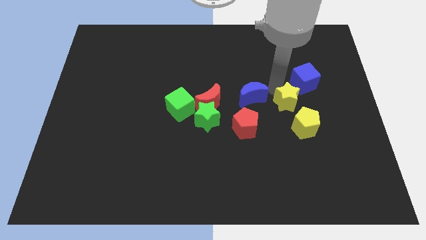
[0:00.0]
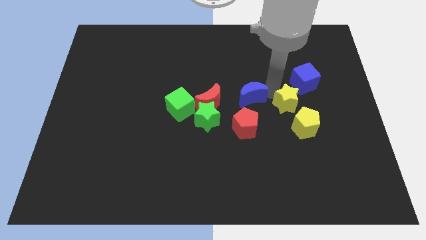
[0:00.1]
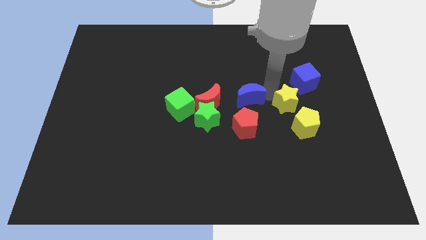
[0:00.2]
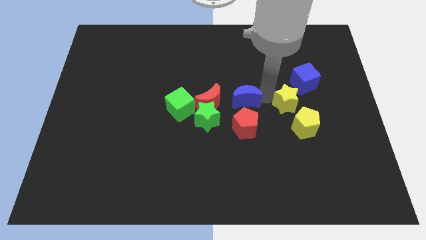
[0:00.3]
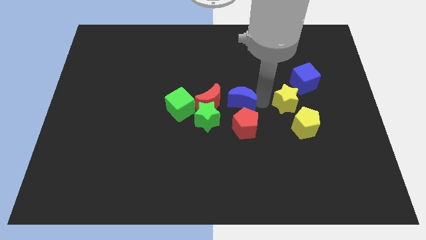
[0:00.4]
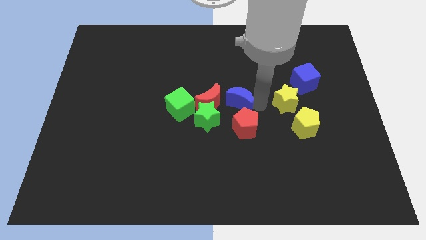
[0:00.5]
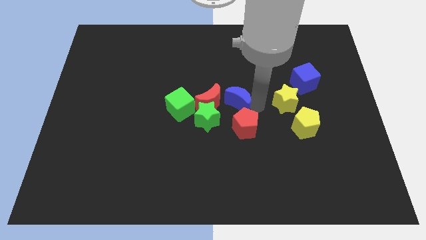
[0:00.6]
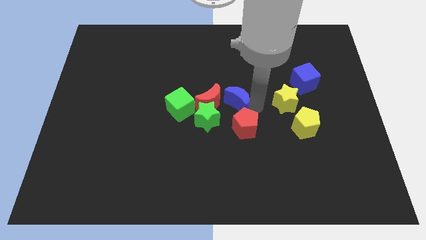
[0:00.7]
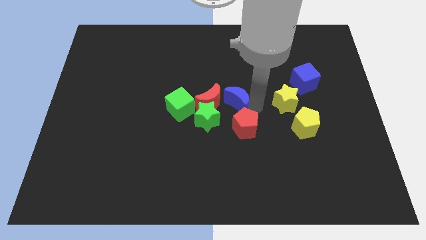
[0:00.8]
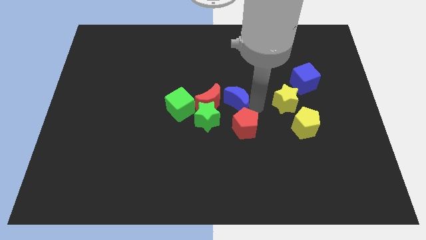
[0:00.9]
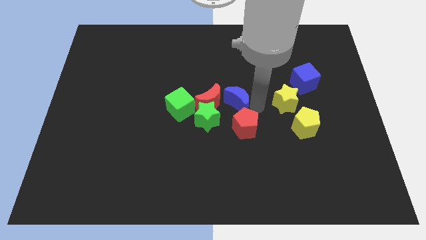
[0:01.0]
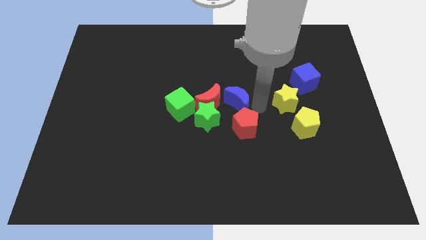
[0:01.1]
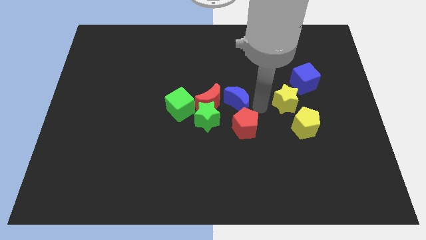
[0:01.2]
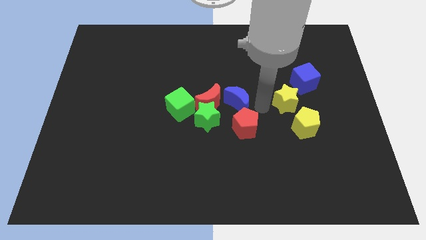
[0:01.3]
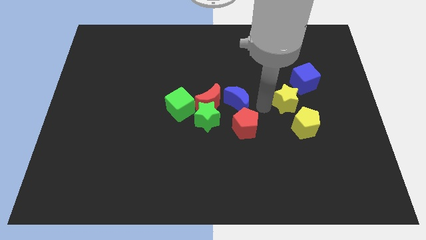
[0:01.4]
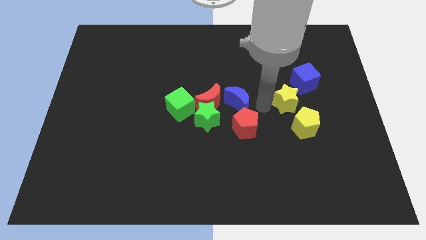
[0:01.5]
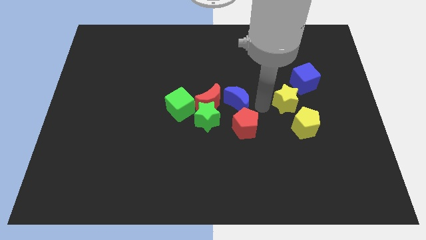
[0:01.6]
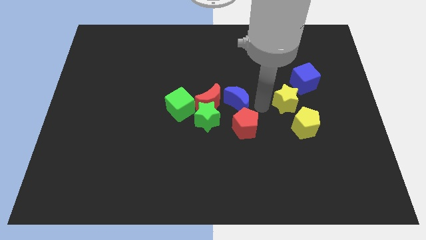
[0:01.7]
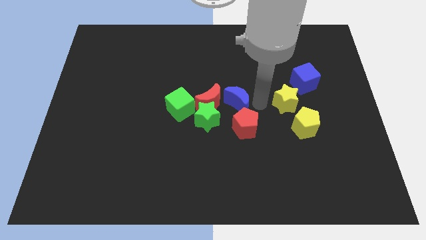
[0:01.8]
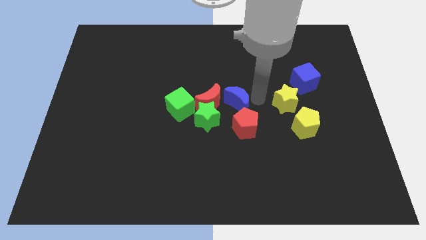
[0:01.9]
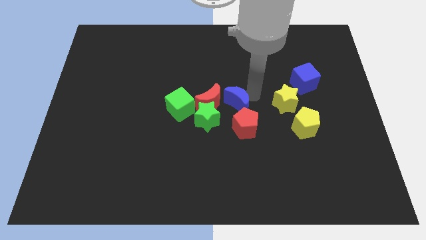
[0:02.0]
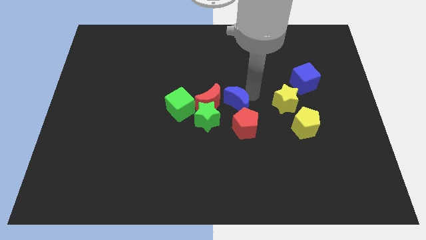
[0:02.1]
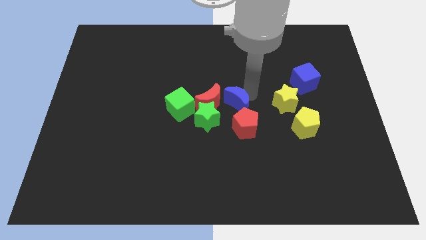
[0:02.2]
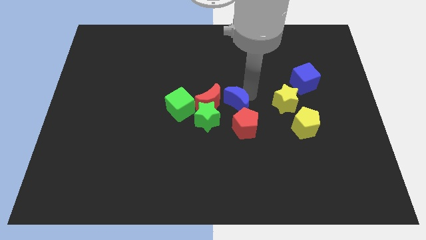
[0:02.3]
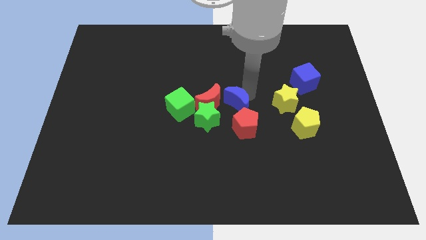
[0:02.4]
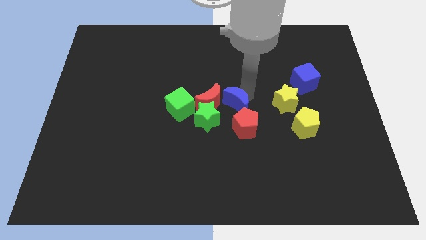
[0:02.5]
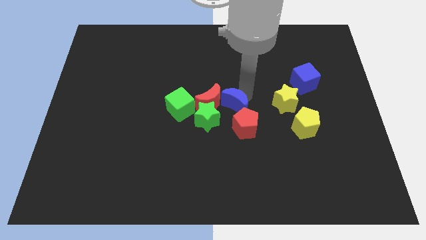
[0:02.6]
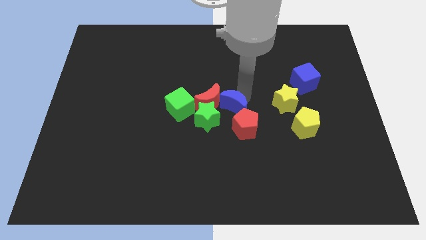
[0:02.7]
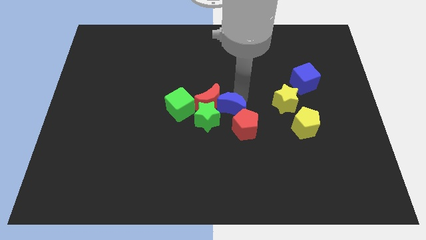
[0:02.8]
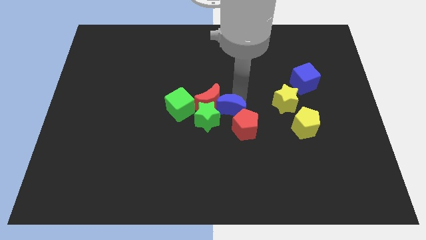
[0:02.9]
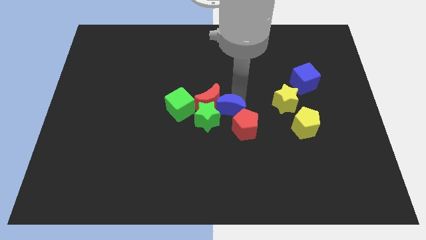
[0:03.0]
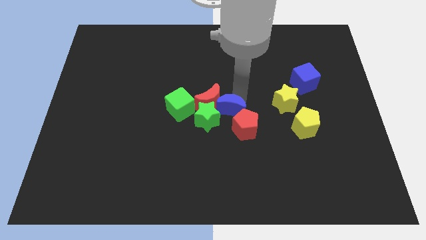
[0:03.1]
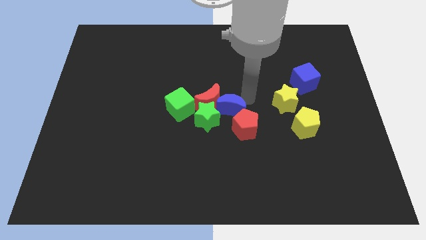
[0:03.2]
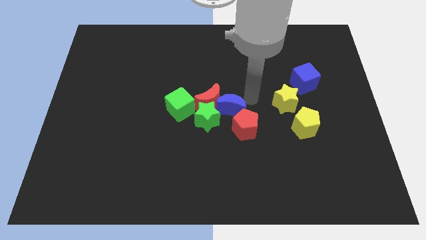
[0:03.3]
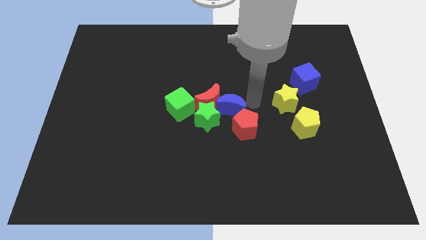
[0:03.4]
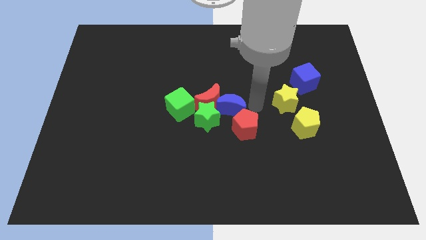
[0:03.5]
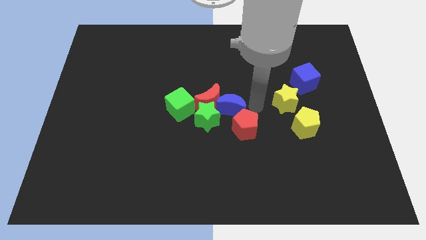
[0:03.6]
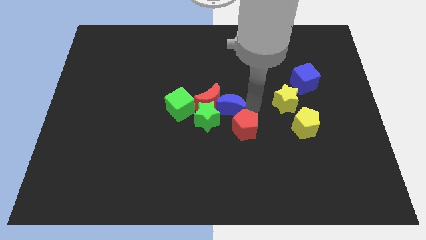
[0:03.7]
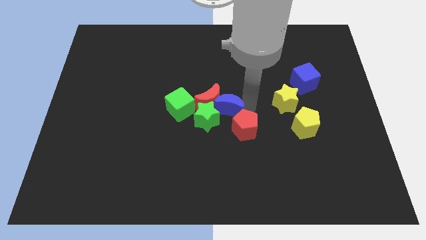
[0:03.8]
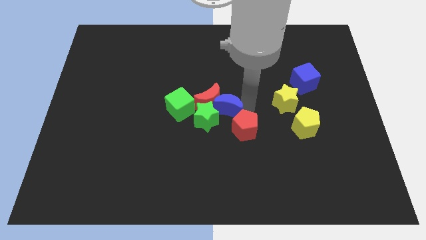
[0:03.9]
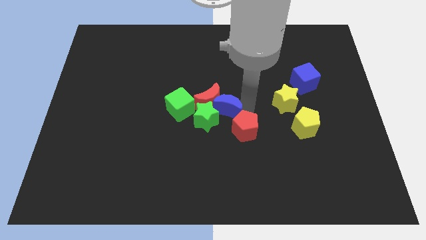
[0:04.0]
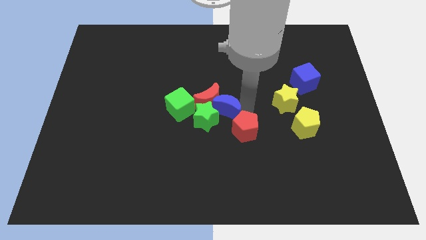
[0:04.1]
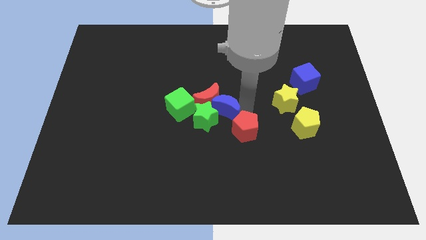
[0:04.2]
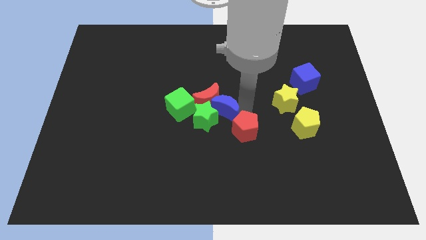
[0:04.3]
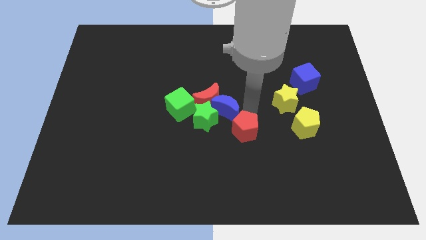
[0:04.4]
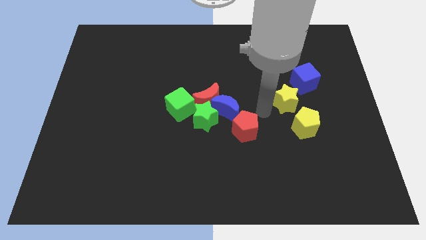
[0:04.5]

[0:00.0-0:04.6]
push the blue moon in between the group of red blocks to make a row

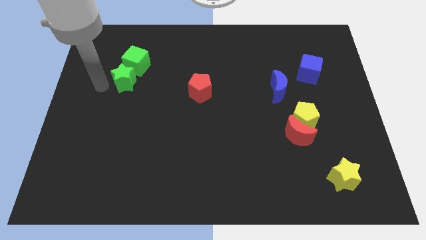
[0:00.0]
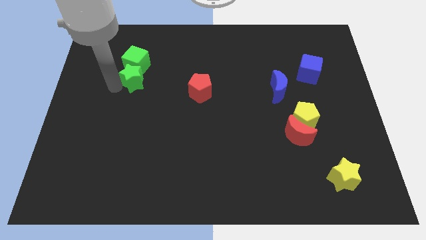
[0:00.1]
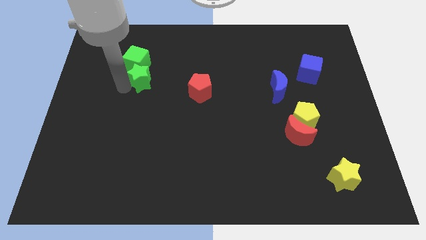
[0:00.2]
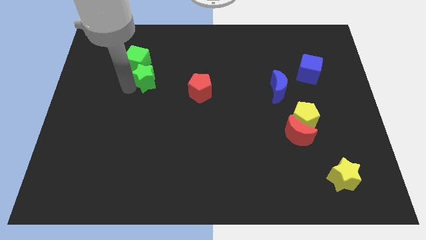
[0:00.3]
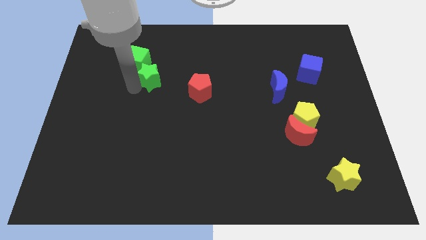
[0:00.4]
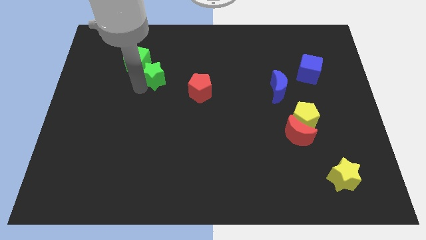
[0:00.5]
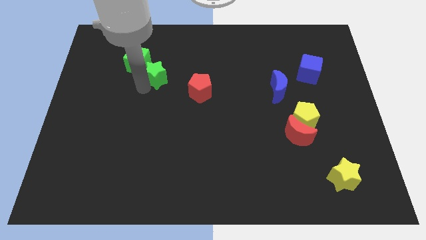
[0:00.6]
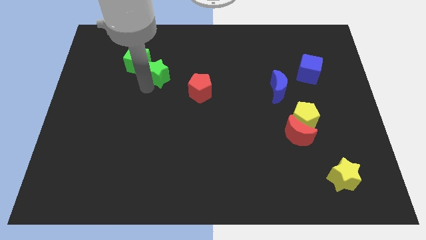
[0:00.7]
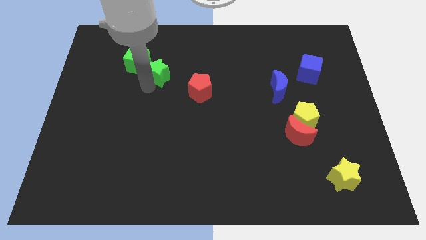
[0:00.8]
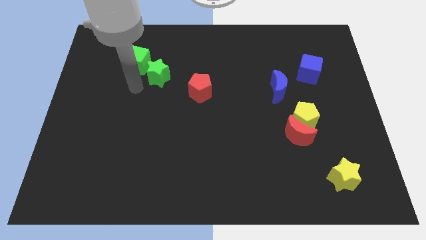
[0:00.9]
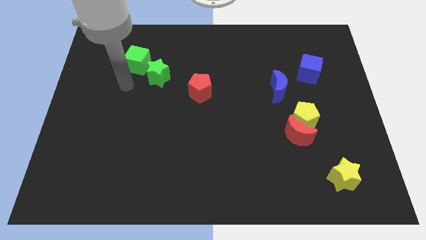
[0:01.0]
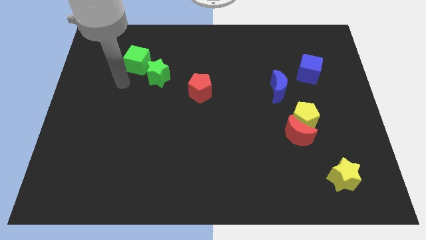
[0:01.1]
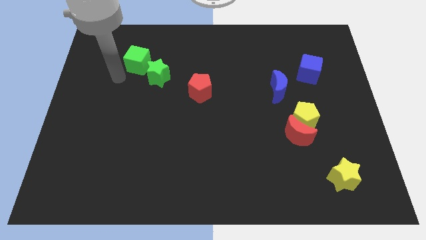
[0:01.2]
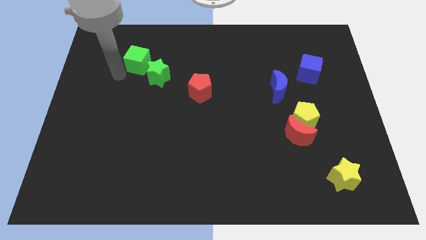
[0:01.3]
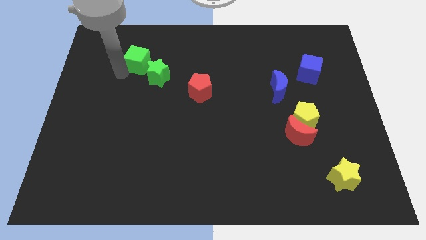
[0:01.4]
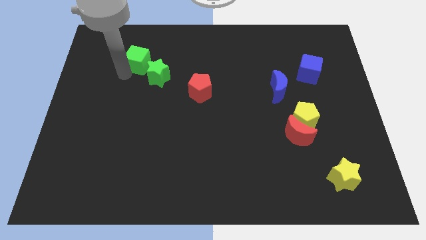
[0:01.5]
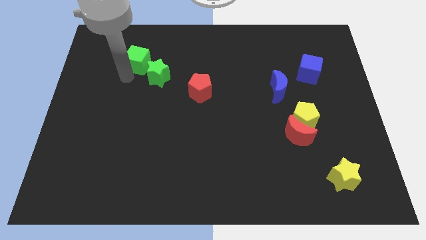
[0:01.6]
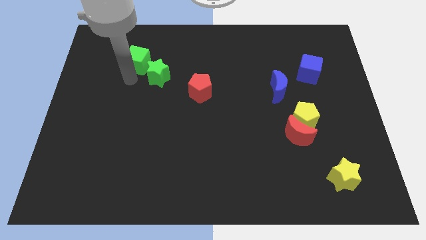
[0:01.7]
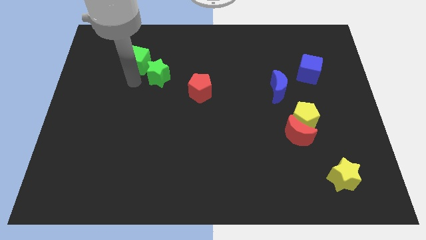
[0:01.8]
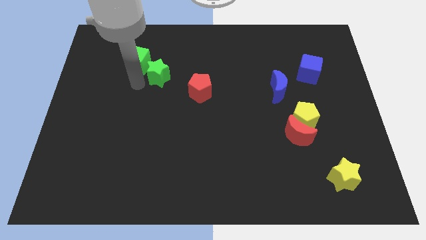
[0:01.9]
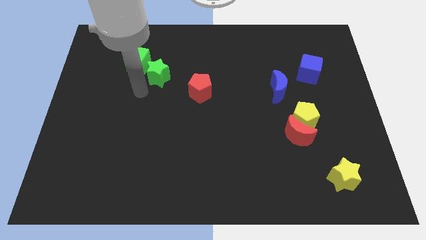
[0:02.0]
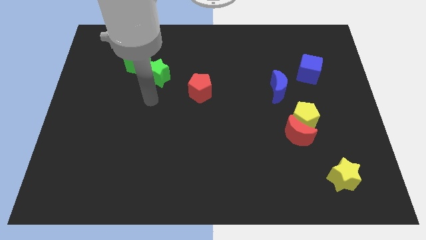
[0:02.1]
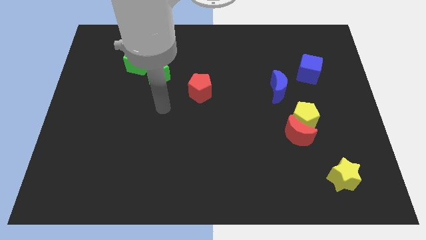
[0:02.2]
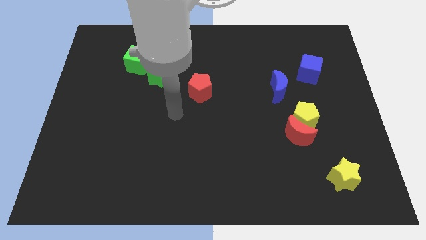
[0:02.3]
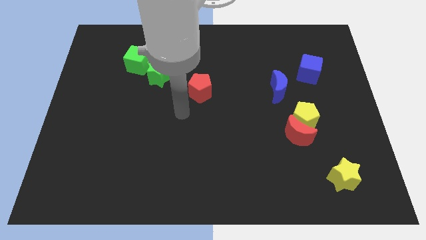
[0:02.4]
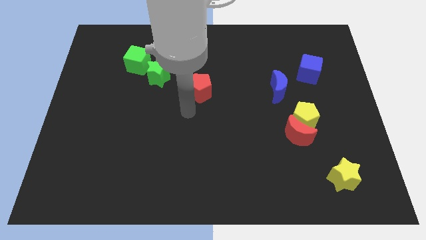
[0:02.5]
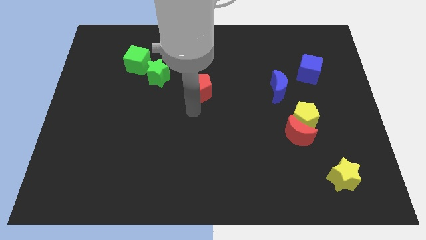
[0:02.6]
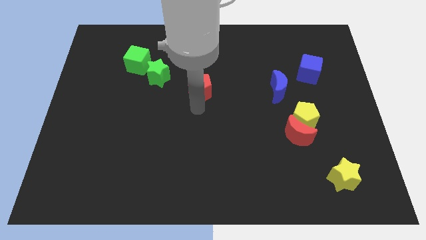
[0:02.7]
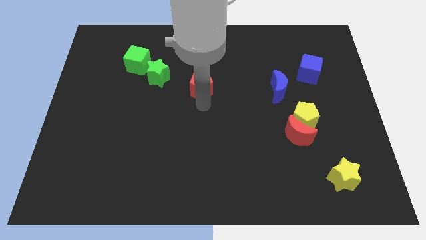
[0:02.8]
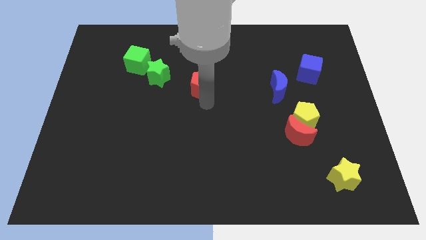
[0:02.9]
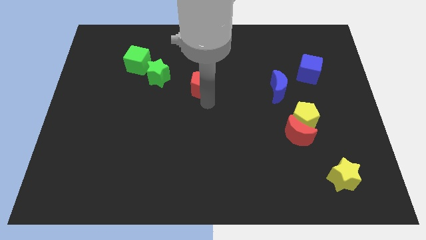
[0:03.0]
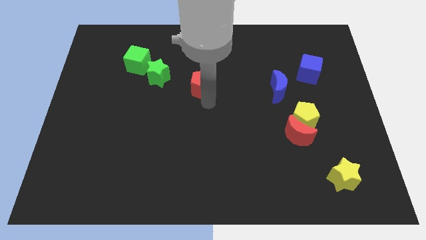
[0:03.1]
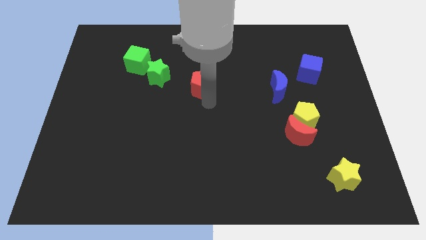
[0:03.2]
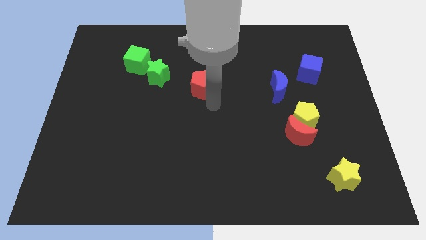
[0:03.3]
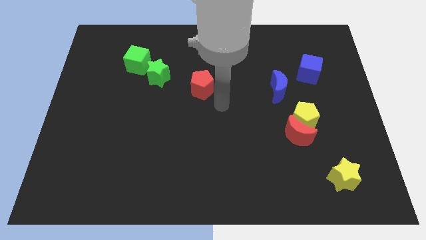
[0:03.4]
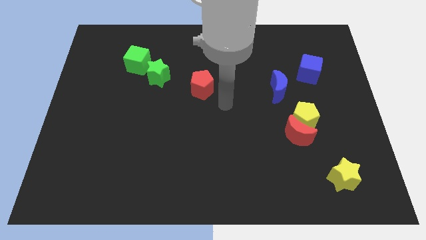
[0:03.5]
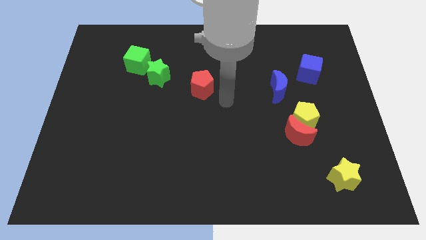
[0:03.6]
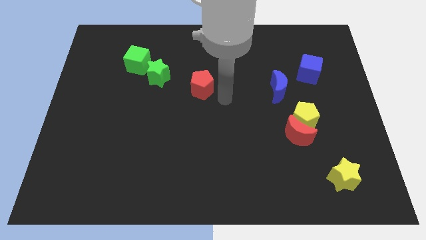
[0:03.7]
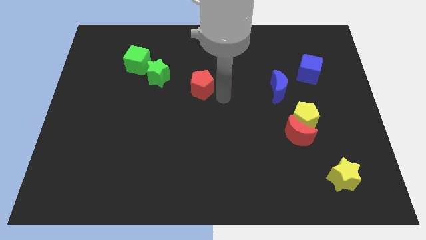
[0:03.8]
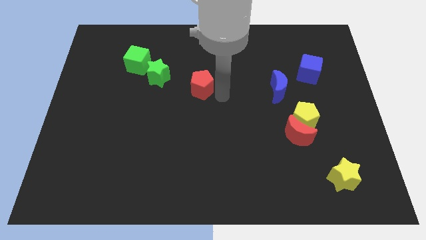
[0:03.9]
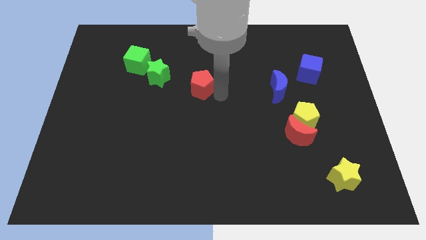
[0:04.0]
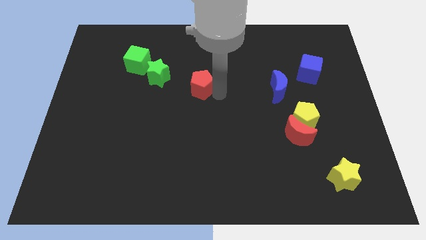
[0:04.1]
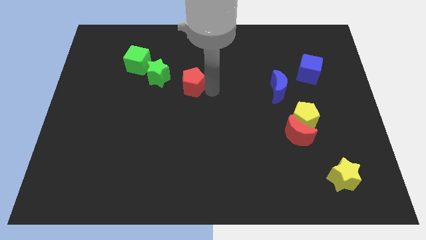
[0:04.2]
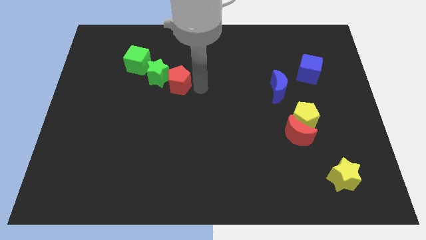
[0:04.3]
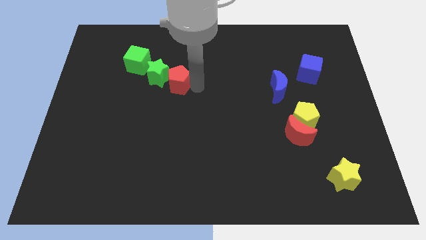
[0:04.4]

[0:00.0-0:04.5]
move red pentagon to the right of green star
